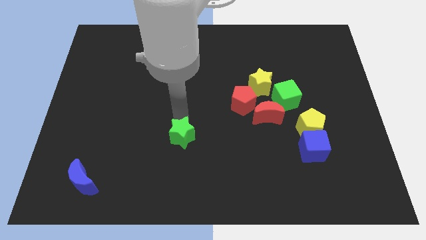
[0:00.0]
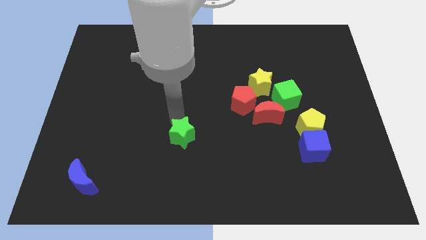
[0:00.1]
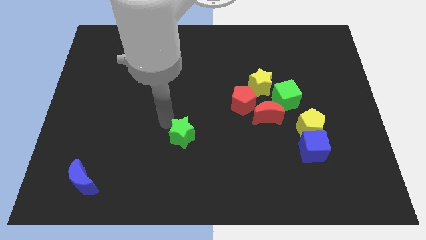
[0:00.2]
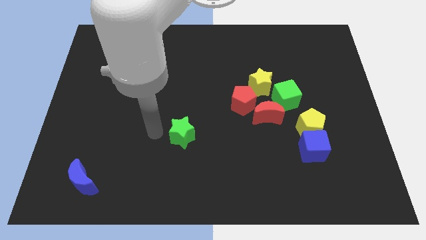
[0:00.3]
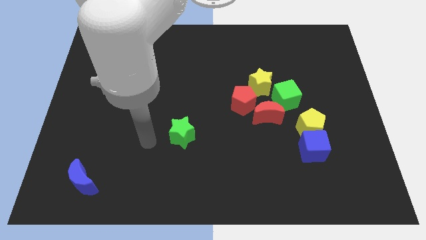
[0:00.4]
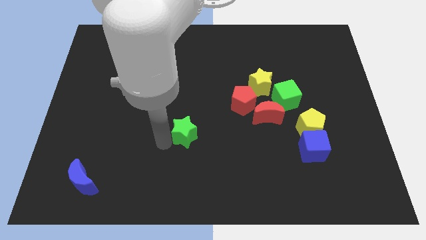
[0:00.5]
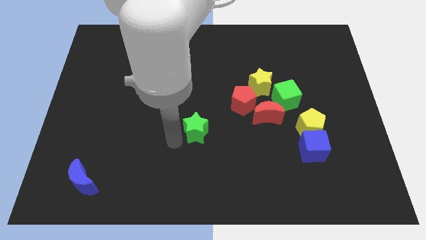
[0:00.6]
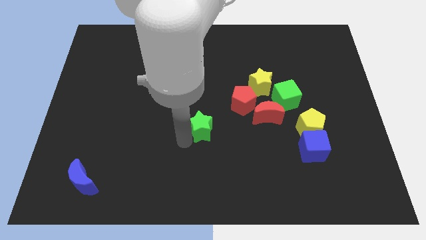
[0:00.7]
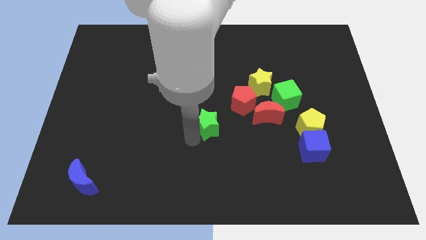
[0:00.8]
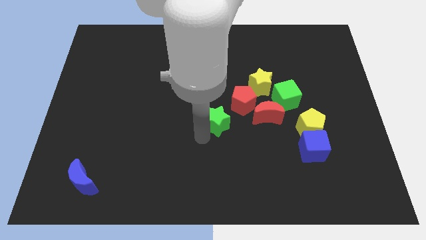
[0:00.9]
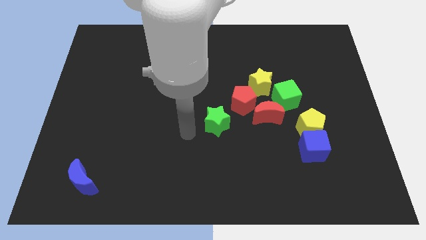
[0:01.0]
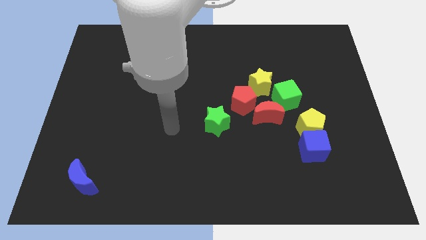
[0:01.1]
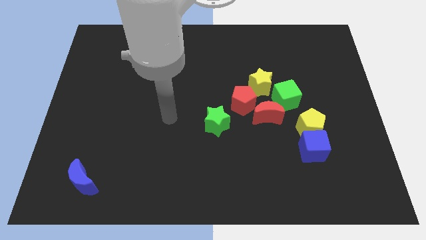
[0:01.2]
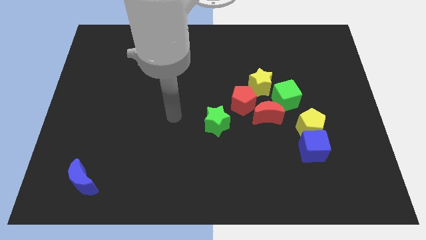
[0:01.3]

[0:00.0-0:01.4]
place the green star to the left side of the red pentagon

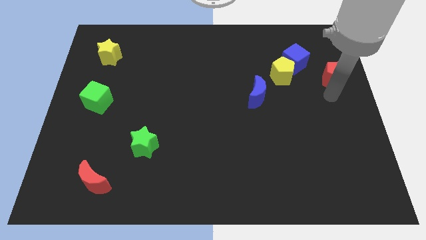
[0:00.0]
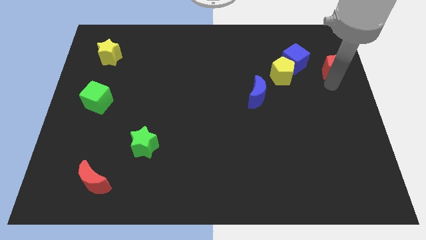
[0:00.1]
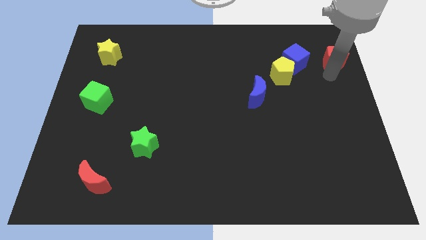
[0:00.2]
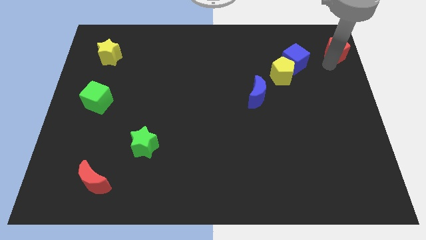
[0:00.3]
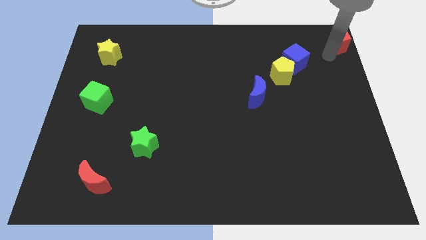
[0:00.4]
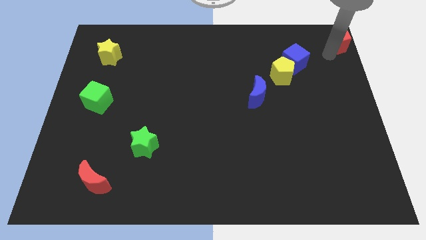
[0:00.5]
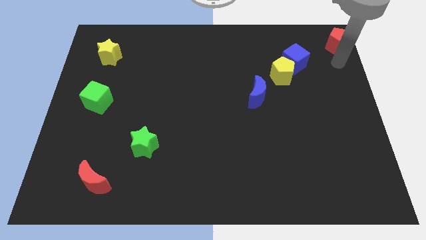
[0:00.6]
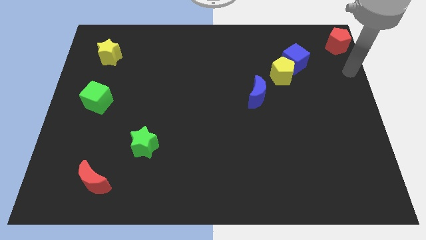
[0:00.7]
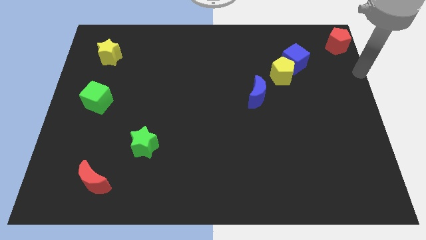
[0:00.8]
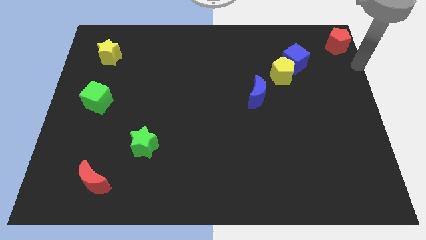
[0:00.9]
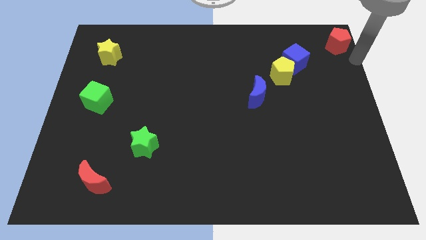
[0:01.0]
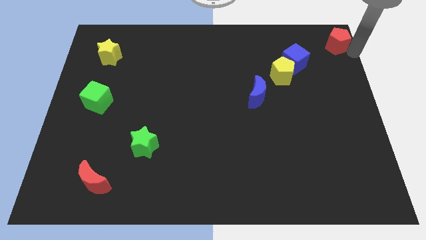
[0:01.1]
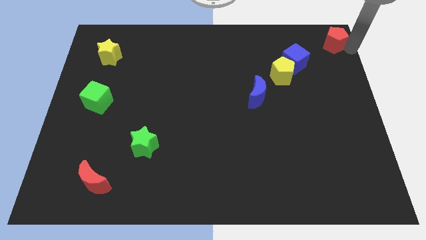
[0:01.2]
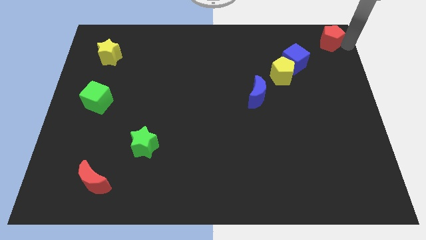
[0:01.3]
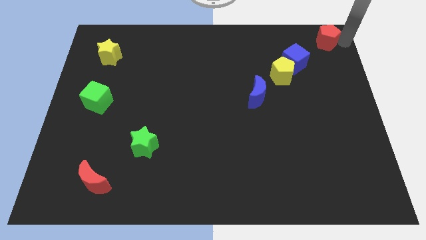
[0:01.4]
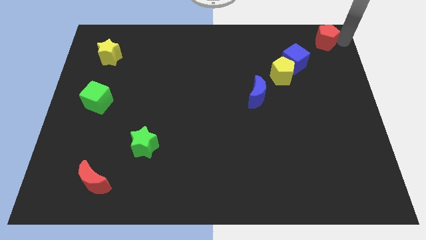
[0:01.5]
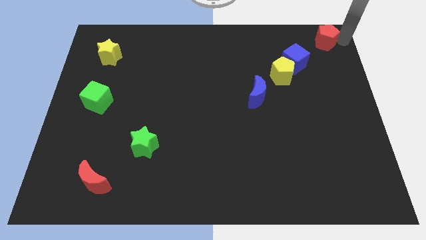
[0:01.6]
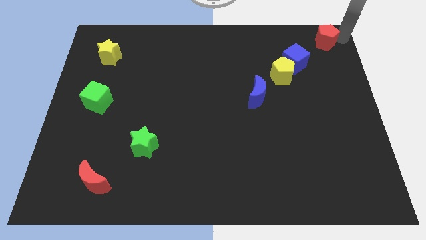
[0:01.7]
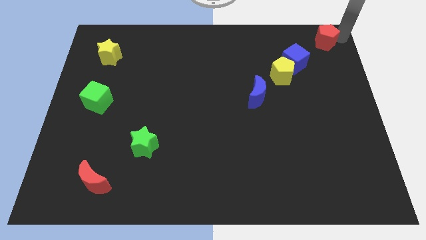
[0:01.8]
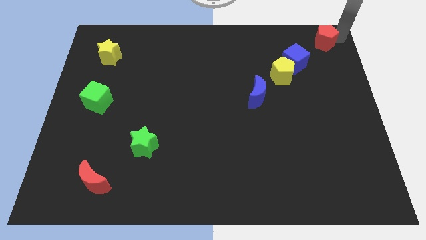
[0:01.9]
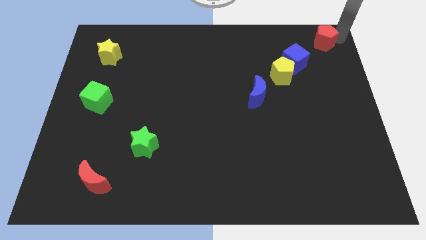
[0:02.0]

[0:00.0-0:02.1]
place the red pentagon at the top right of the blue cube

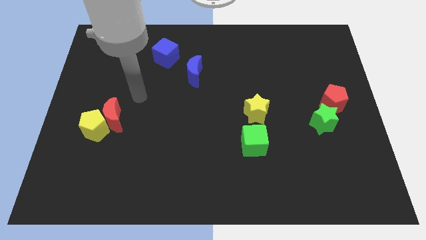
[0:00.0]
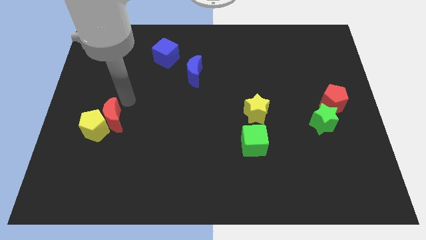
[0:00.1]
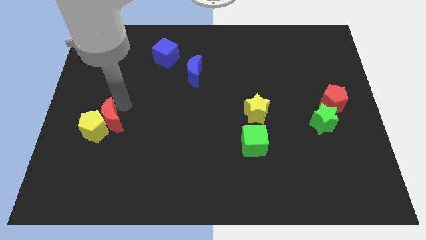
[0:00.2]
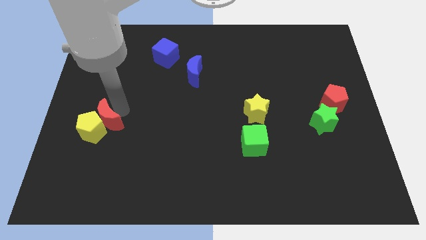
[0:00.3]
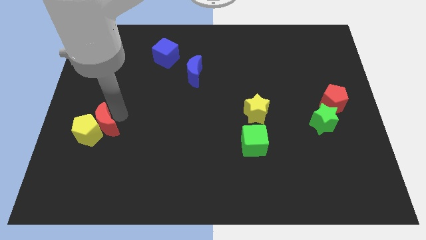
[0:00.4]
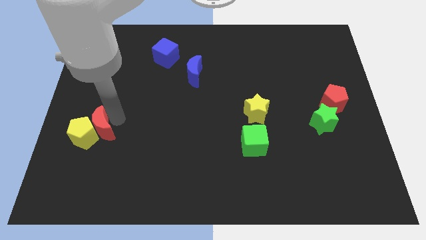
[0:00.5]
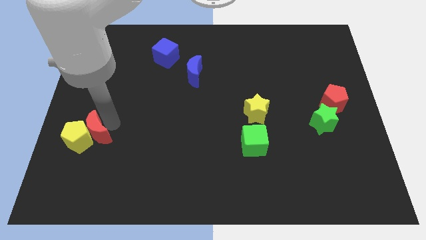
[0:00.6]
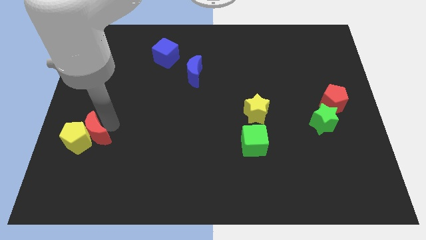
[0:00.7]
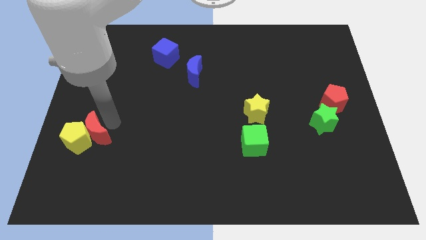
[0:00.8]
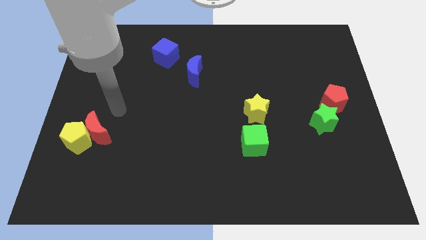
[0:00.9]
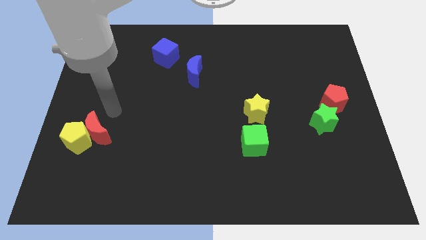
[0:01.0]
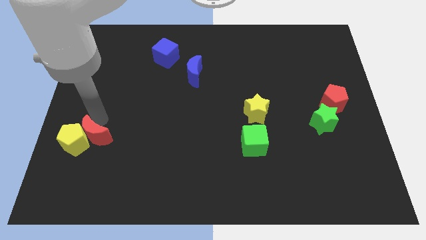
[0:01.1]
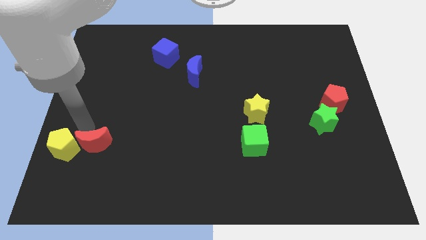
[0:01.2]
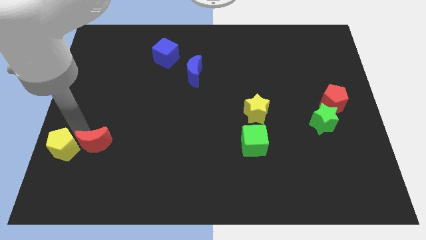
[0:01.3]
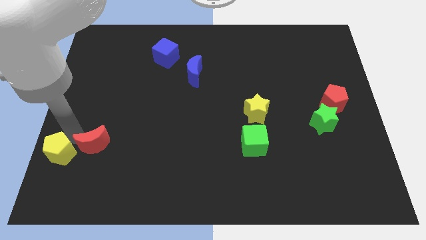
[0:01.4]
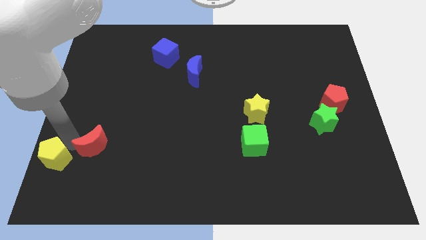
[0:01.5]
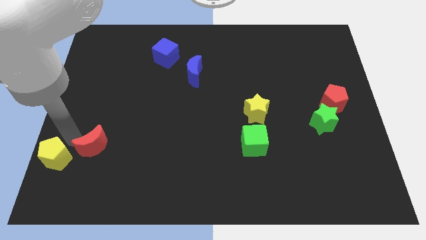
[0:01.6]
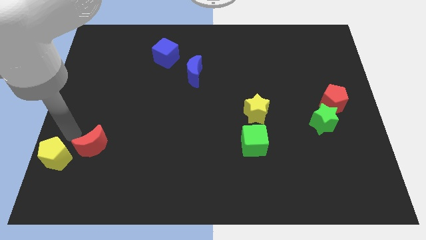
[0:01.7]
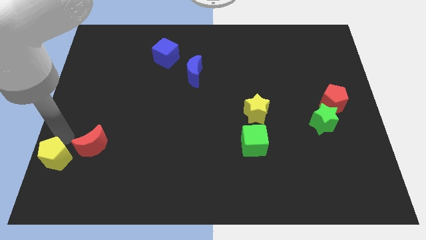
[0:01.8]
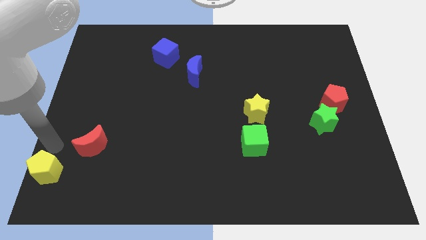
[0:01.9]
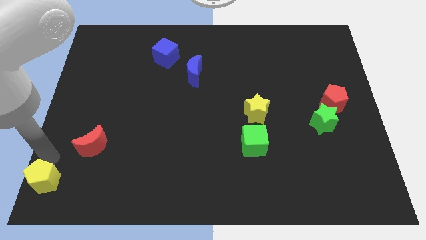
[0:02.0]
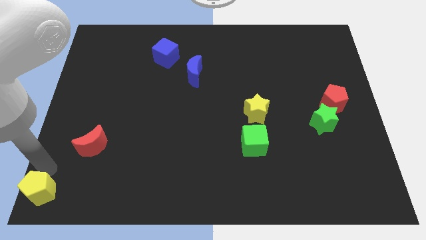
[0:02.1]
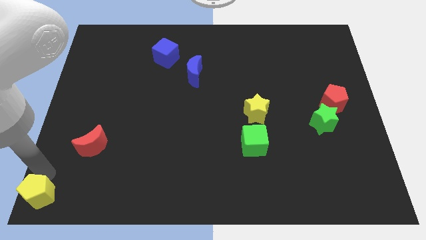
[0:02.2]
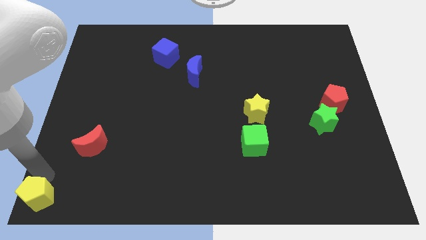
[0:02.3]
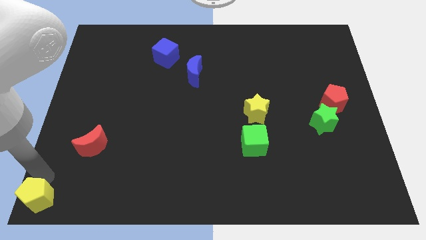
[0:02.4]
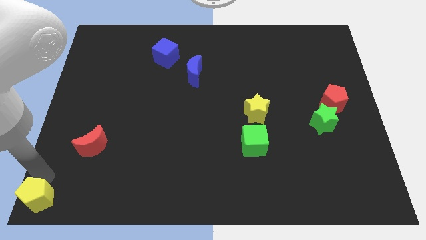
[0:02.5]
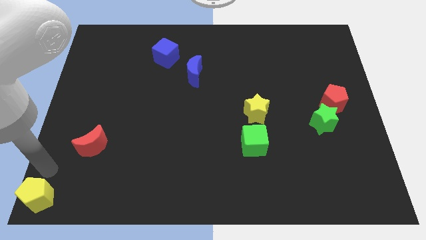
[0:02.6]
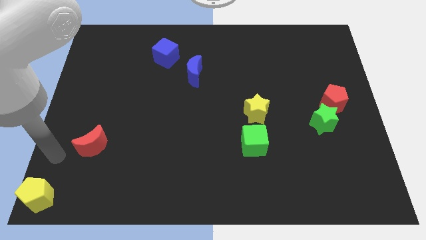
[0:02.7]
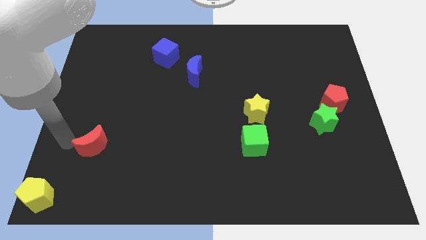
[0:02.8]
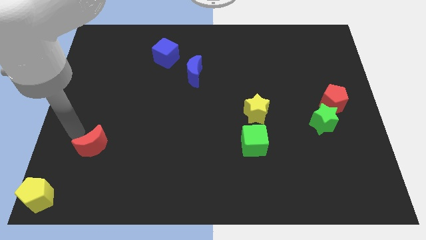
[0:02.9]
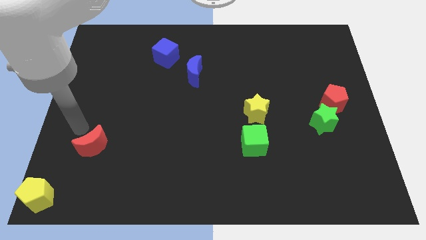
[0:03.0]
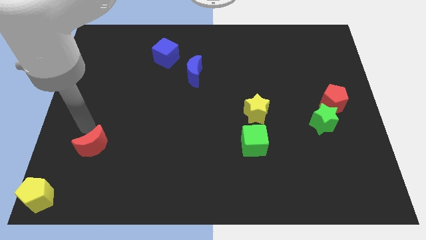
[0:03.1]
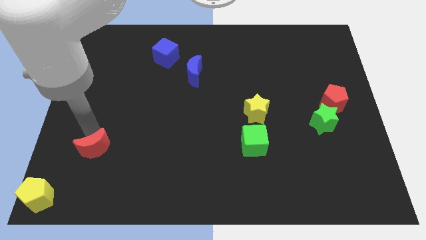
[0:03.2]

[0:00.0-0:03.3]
move the yellow pentagon to the bottom left of the board

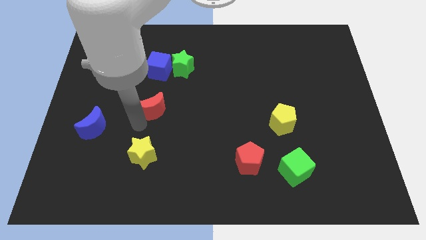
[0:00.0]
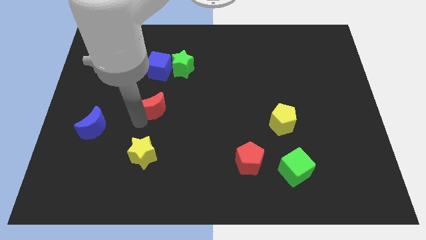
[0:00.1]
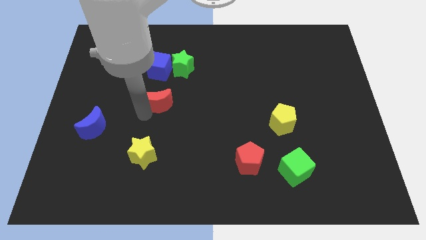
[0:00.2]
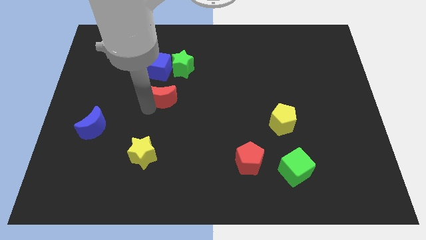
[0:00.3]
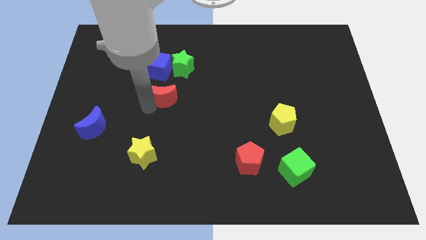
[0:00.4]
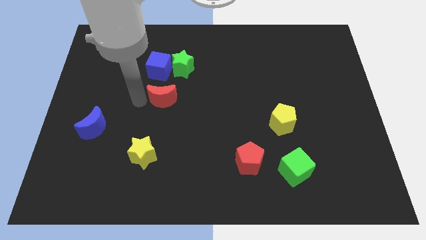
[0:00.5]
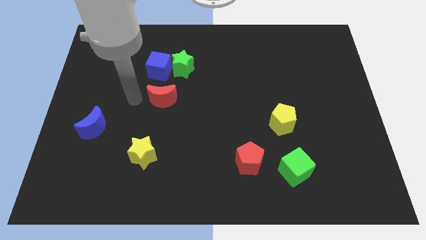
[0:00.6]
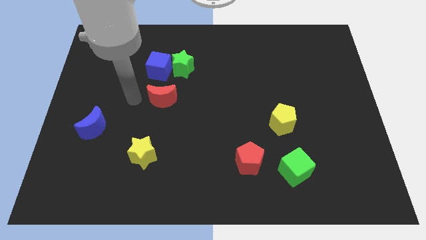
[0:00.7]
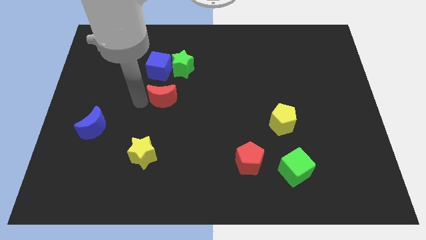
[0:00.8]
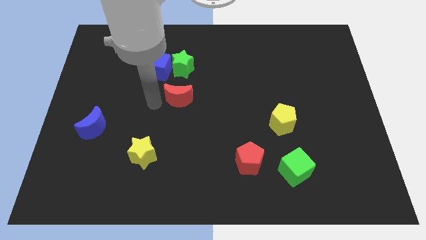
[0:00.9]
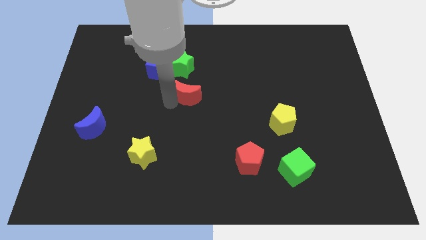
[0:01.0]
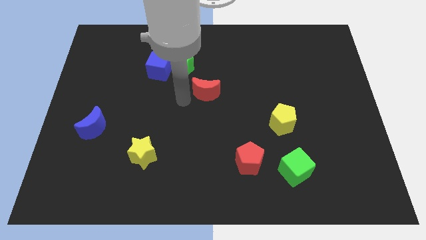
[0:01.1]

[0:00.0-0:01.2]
push the red moon diagonally to the bottom right of the green star

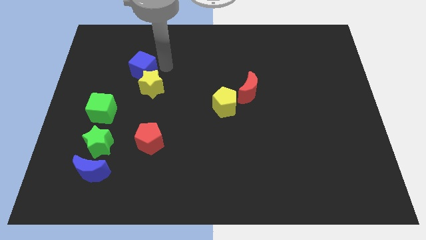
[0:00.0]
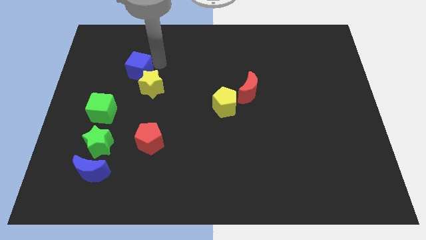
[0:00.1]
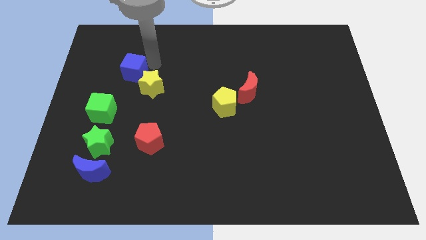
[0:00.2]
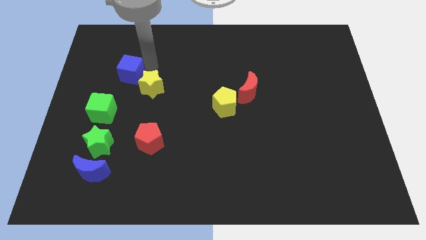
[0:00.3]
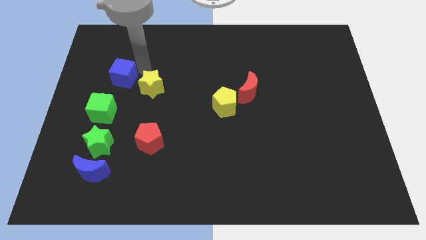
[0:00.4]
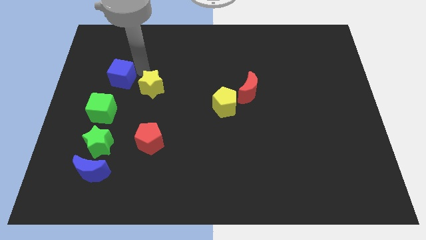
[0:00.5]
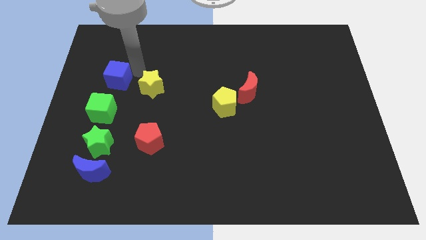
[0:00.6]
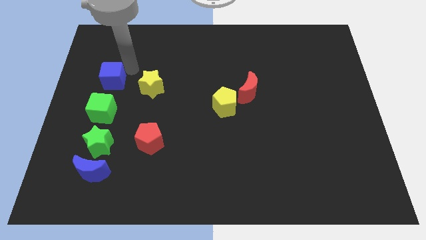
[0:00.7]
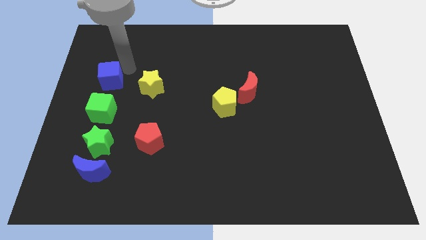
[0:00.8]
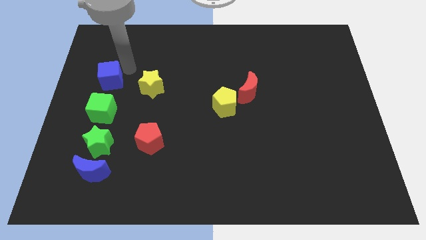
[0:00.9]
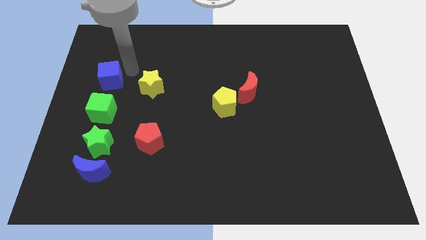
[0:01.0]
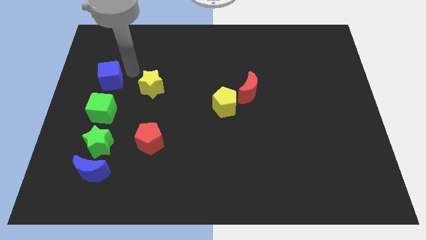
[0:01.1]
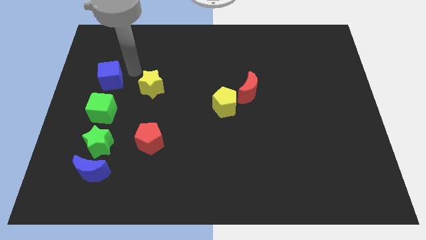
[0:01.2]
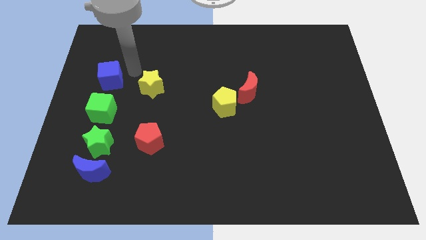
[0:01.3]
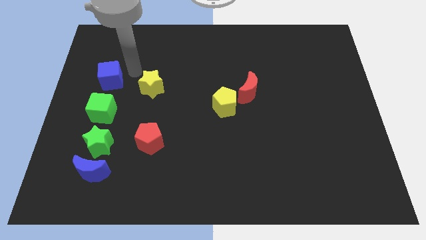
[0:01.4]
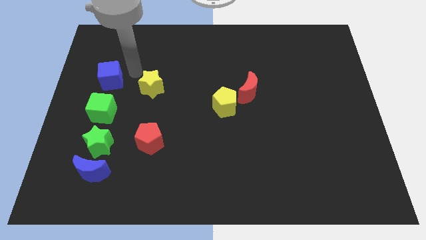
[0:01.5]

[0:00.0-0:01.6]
place the blue cube above green cube
